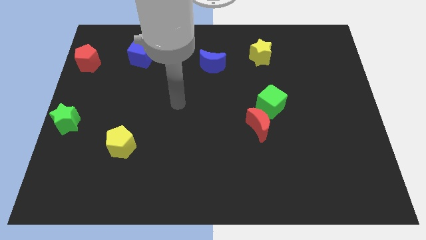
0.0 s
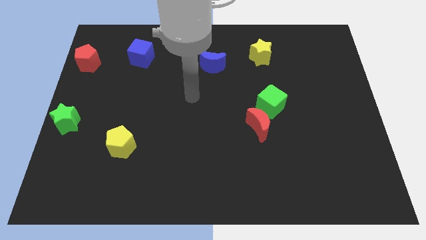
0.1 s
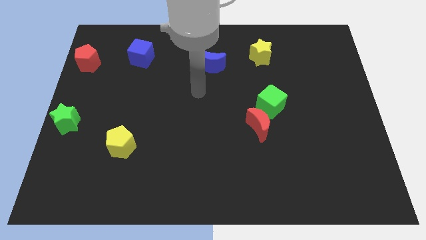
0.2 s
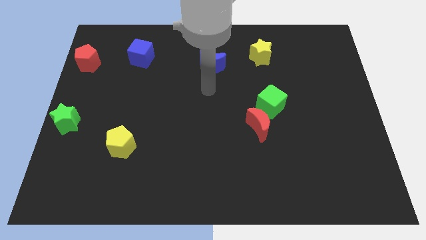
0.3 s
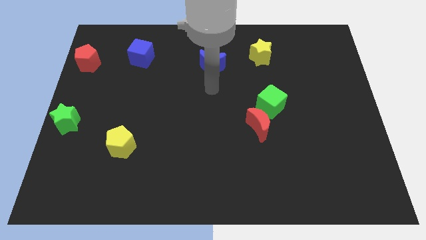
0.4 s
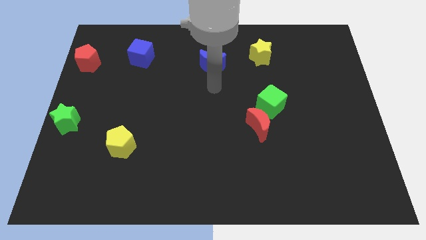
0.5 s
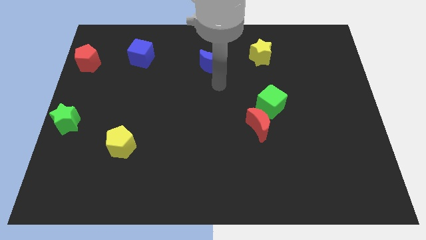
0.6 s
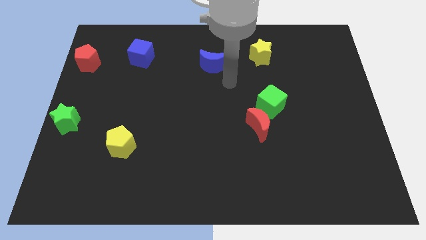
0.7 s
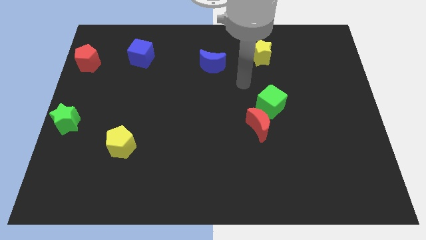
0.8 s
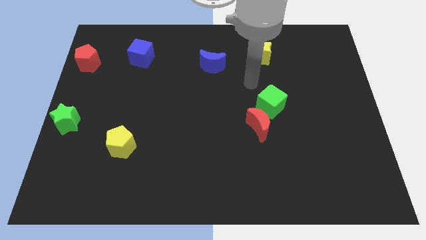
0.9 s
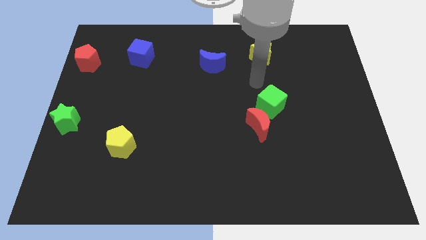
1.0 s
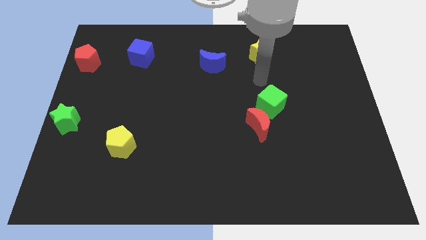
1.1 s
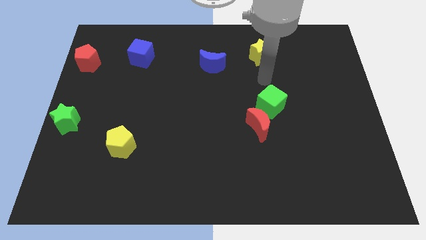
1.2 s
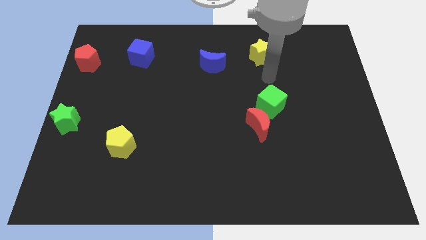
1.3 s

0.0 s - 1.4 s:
point the arm in between the yellow star and the green cube

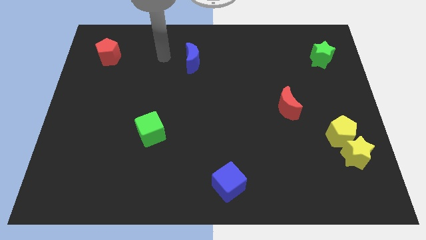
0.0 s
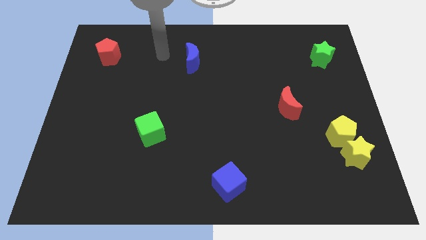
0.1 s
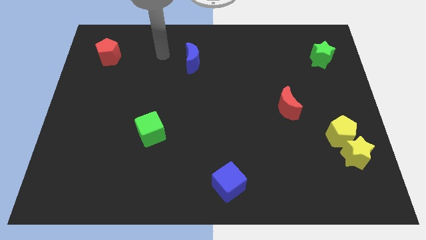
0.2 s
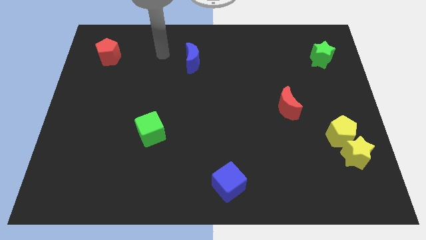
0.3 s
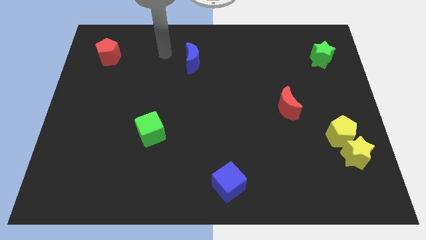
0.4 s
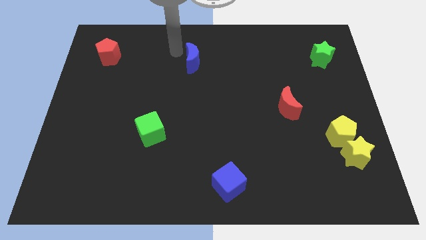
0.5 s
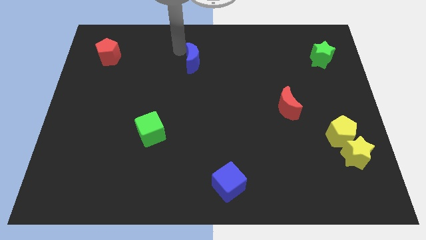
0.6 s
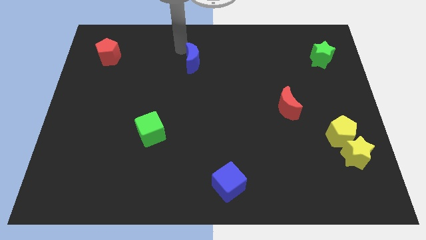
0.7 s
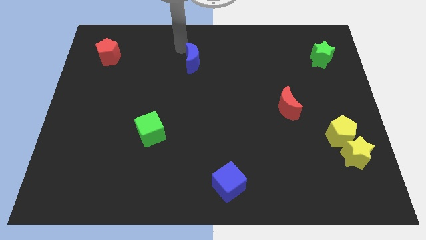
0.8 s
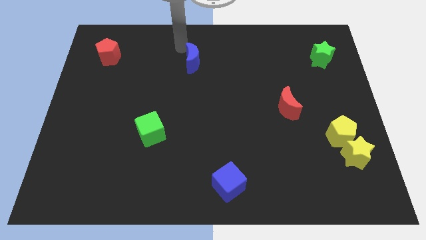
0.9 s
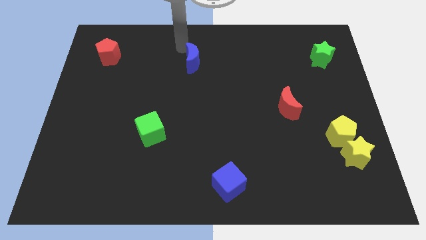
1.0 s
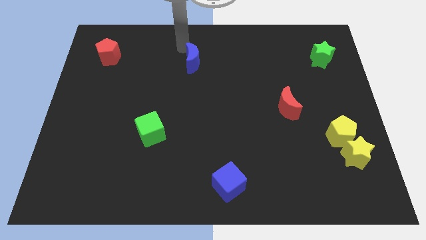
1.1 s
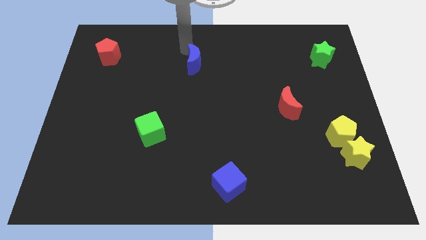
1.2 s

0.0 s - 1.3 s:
tap the blue crescent

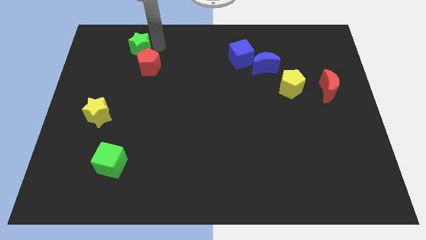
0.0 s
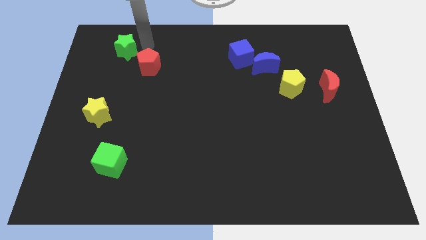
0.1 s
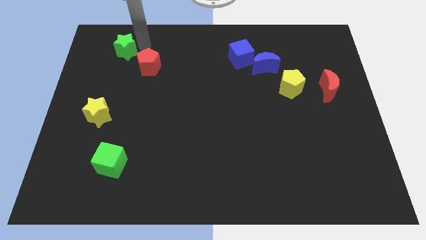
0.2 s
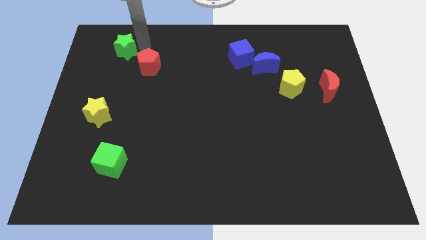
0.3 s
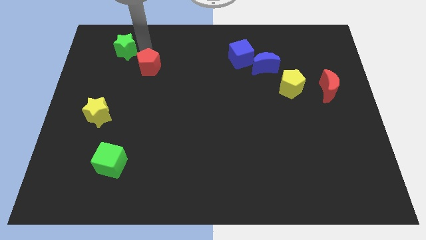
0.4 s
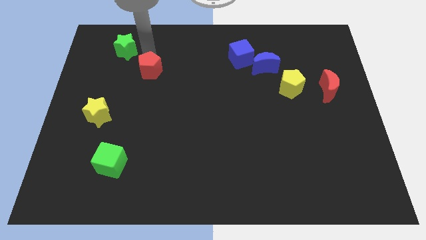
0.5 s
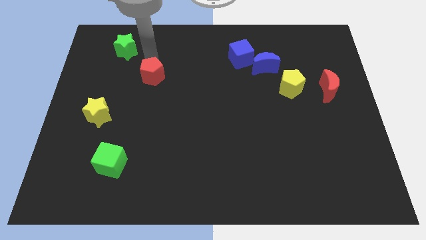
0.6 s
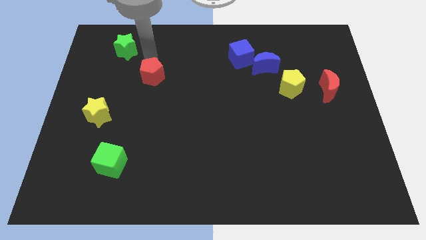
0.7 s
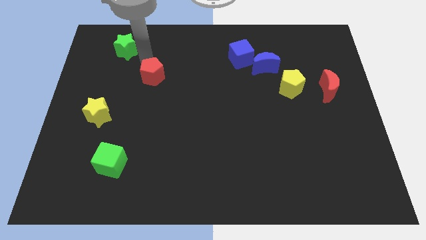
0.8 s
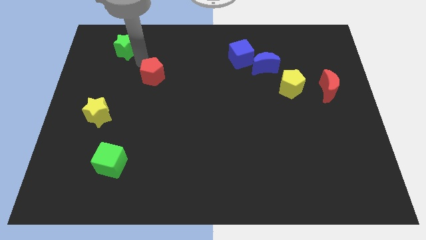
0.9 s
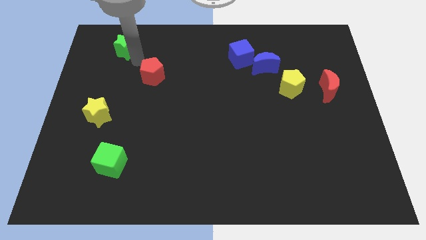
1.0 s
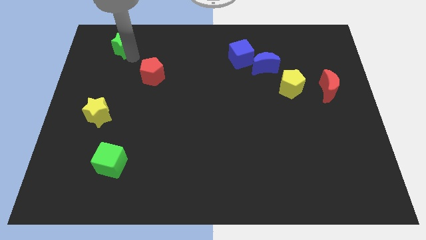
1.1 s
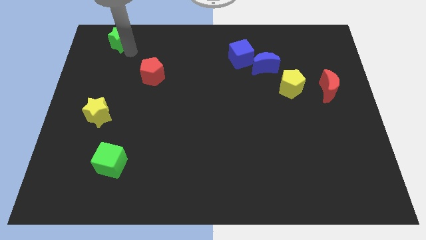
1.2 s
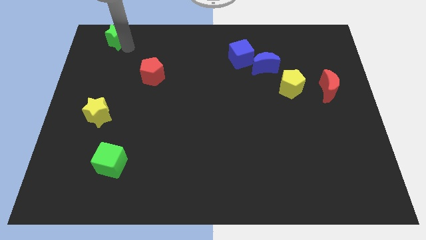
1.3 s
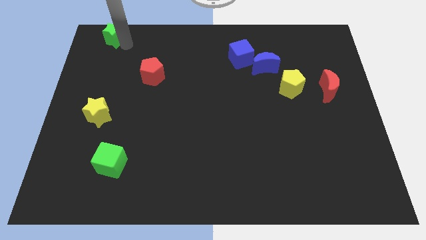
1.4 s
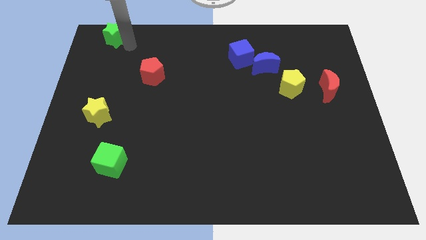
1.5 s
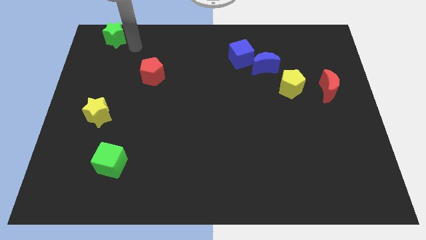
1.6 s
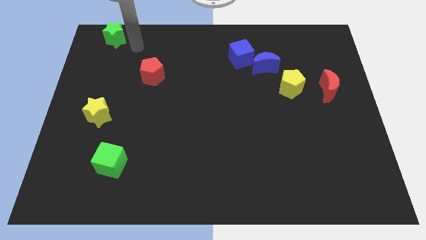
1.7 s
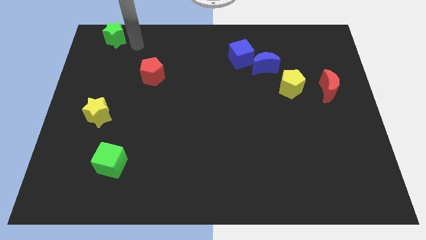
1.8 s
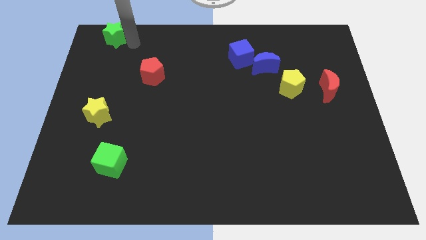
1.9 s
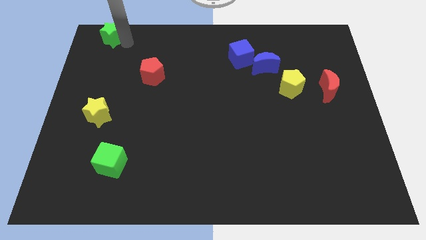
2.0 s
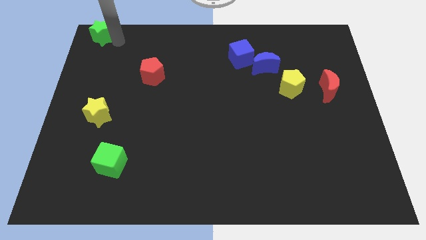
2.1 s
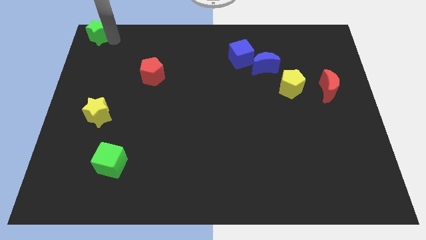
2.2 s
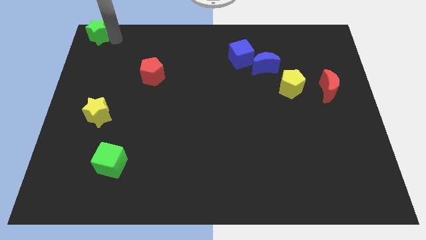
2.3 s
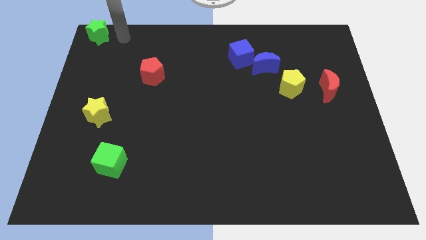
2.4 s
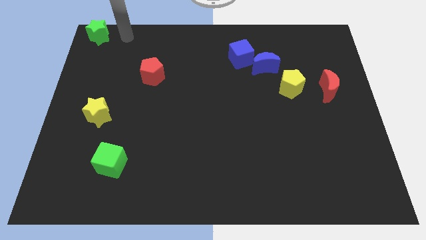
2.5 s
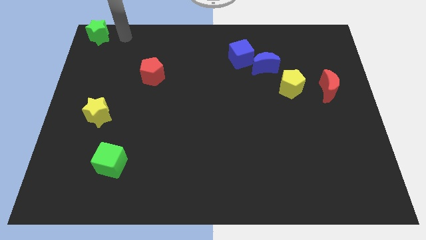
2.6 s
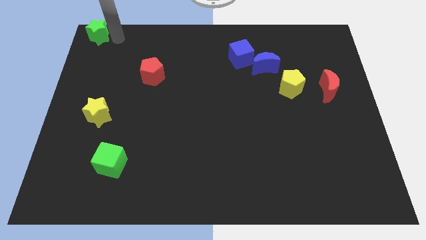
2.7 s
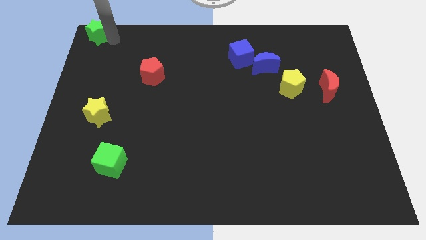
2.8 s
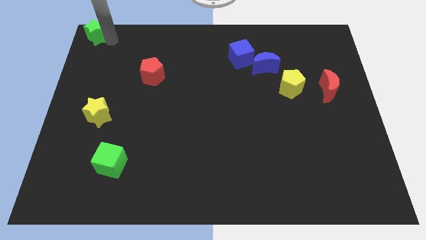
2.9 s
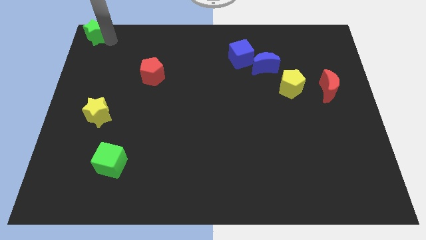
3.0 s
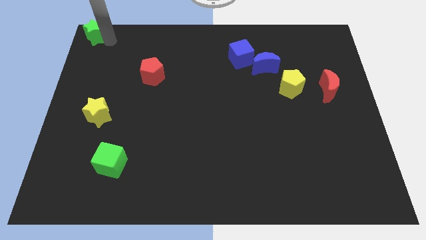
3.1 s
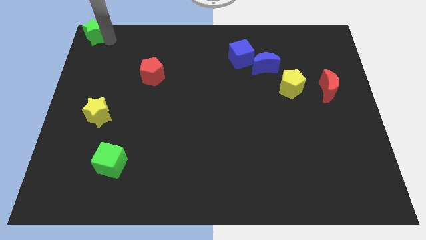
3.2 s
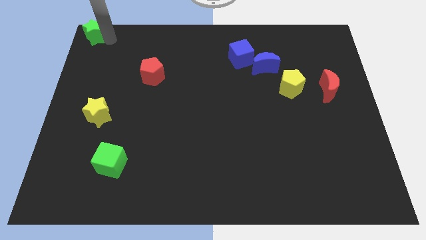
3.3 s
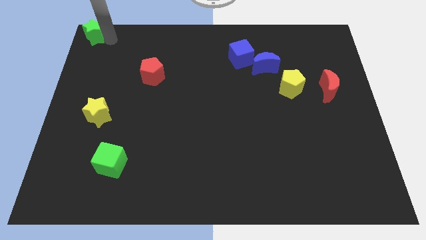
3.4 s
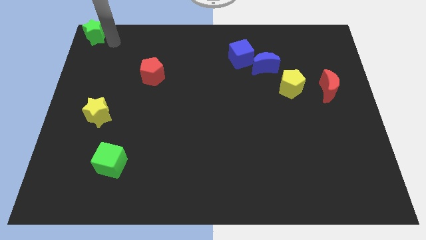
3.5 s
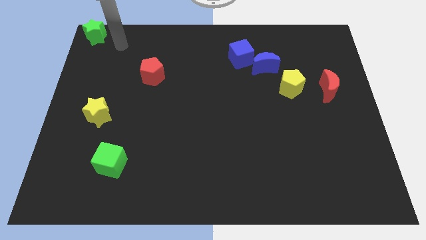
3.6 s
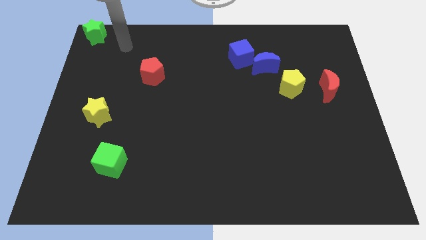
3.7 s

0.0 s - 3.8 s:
place the green star to the top left corner of the board

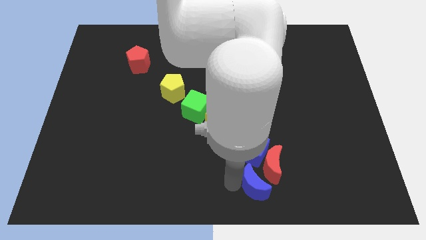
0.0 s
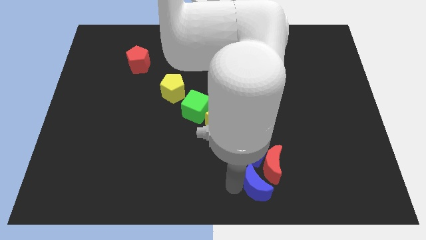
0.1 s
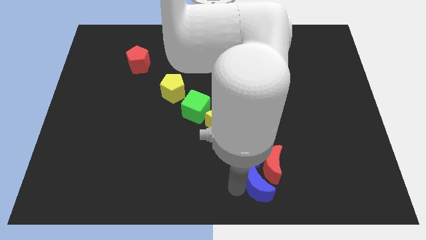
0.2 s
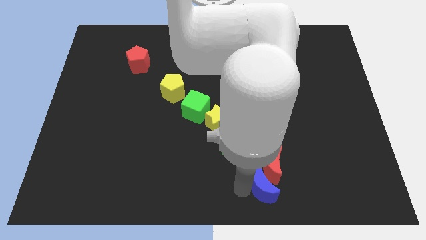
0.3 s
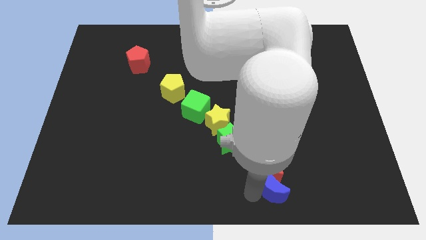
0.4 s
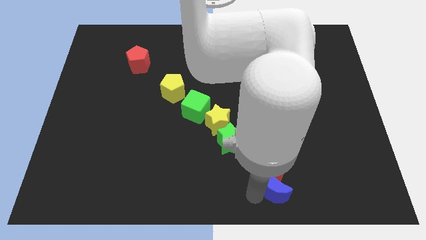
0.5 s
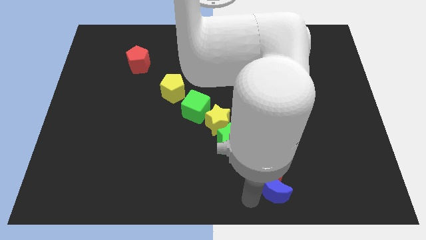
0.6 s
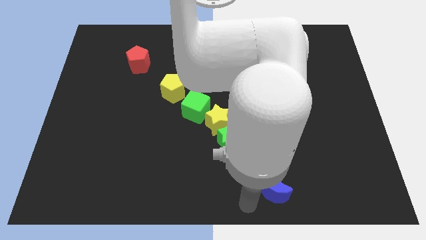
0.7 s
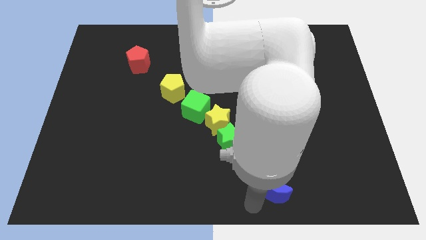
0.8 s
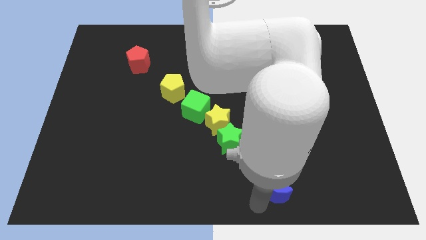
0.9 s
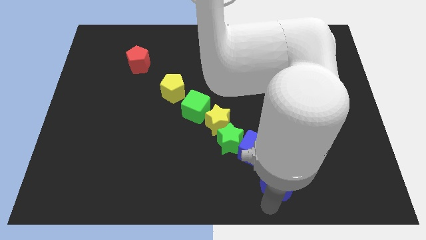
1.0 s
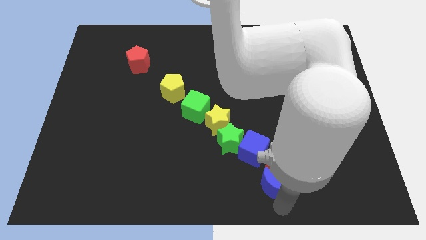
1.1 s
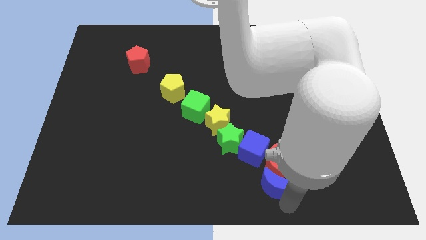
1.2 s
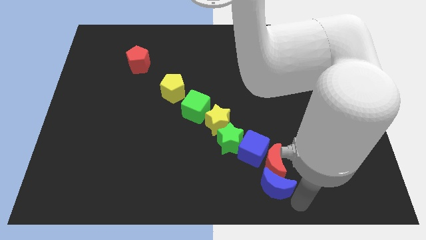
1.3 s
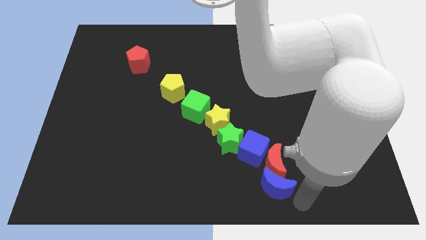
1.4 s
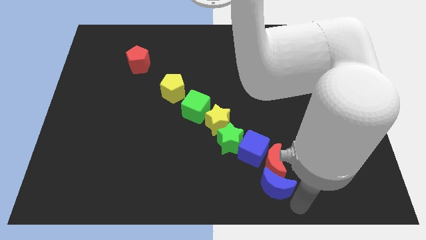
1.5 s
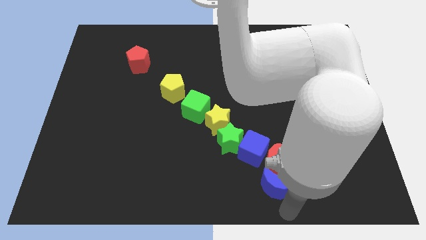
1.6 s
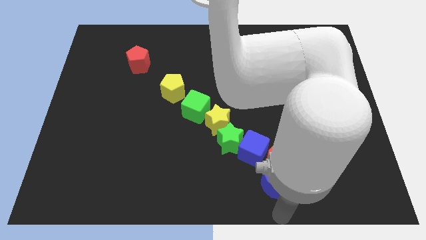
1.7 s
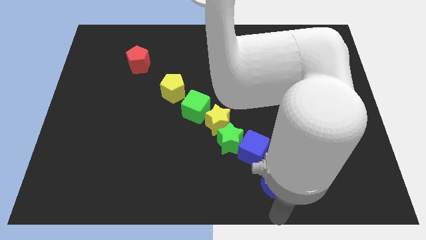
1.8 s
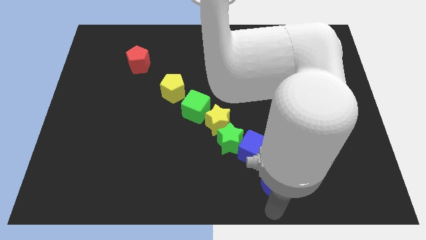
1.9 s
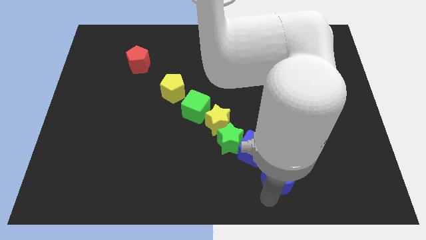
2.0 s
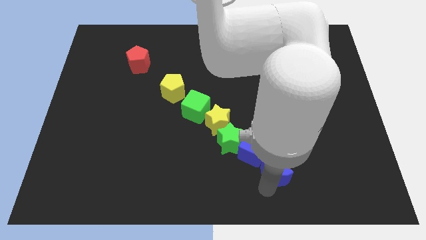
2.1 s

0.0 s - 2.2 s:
push blue moon into the red moon

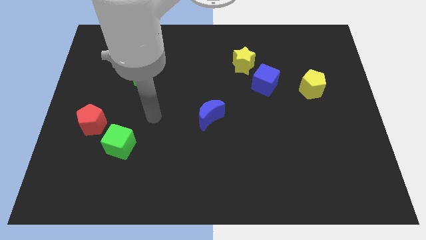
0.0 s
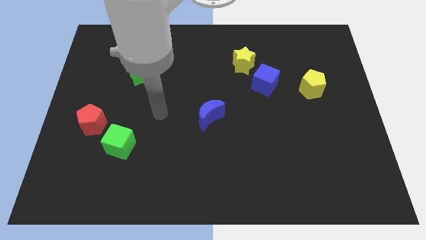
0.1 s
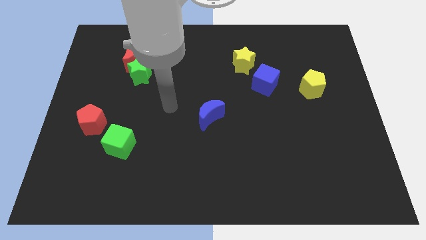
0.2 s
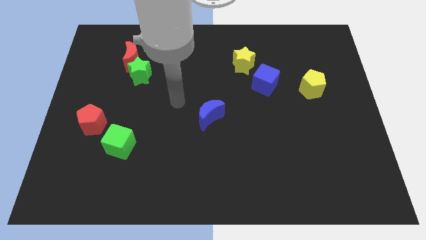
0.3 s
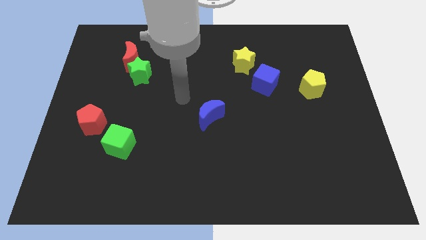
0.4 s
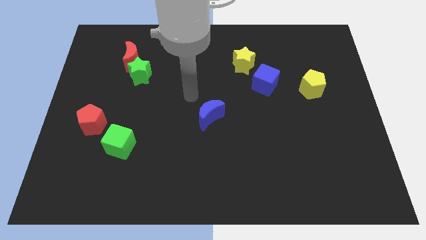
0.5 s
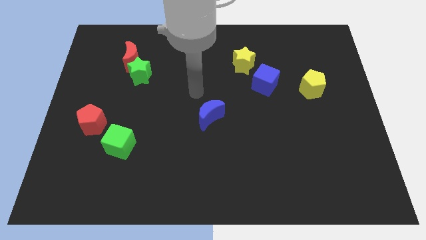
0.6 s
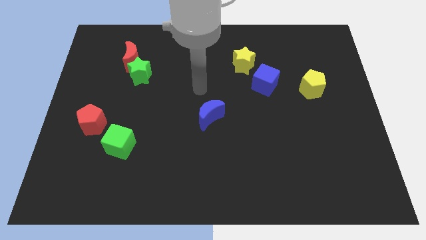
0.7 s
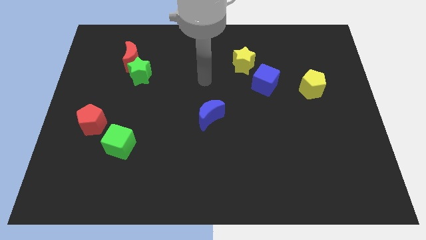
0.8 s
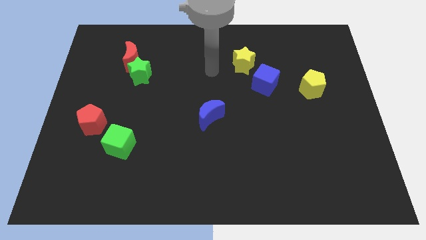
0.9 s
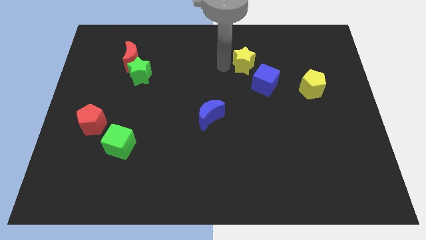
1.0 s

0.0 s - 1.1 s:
move your arm to the left of yellow star
